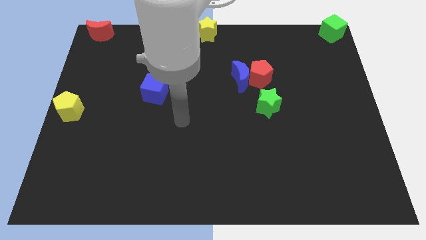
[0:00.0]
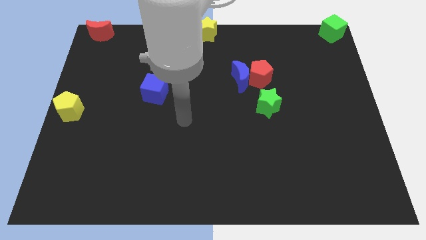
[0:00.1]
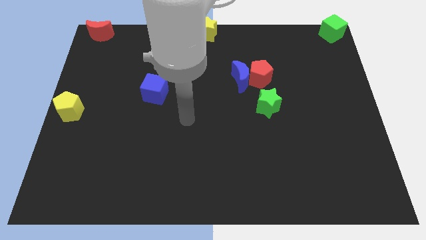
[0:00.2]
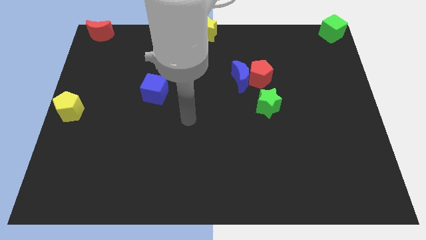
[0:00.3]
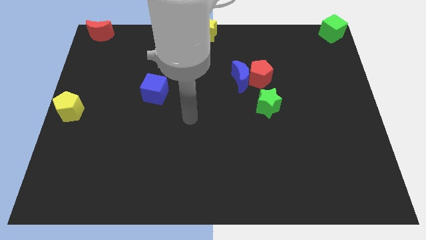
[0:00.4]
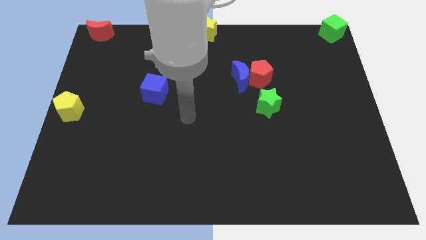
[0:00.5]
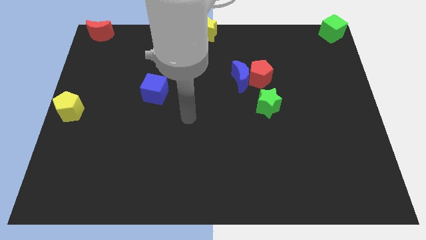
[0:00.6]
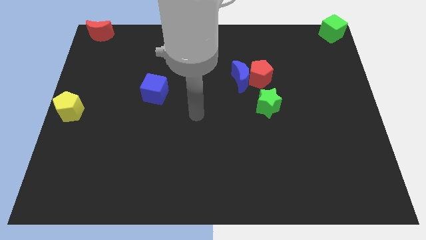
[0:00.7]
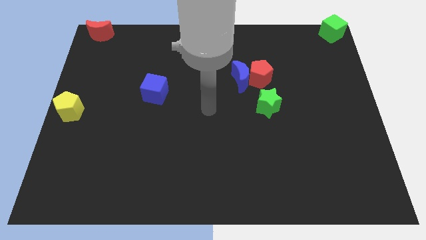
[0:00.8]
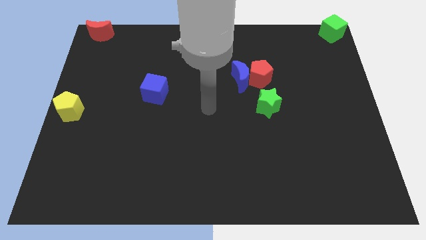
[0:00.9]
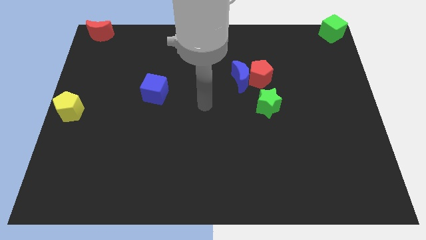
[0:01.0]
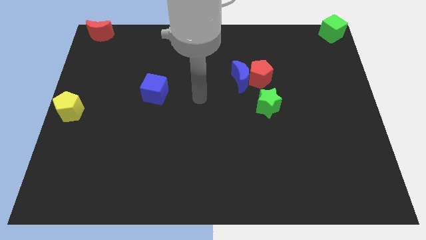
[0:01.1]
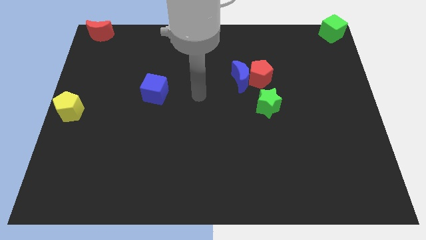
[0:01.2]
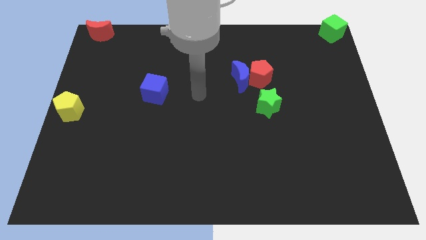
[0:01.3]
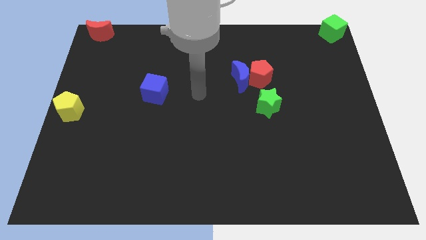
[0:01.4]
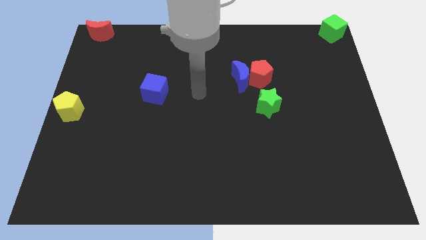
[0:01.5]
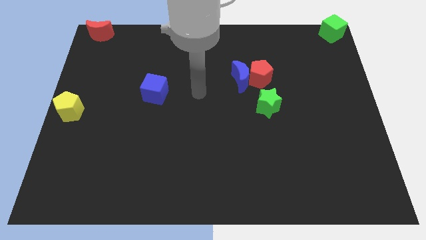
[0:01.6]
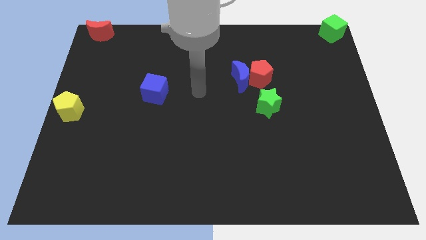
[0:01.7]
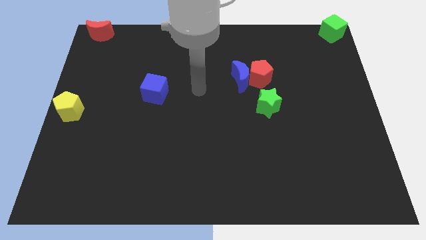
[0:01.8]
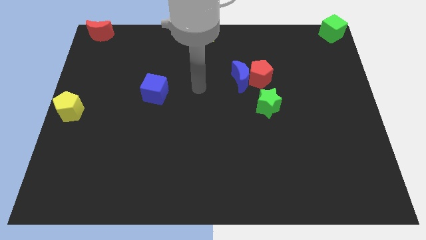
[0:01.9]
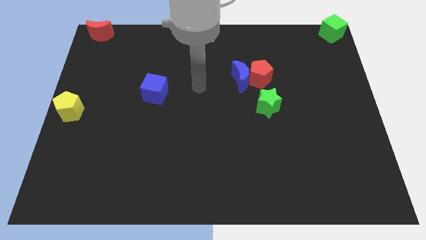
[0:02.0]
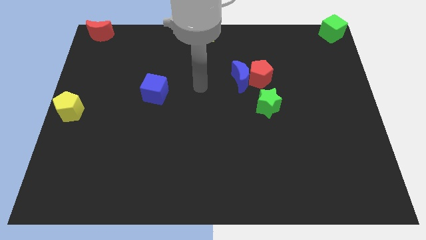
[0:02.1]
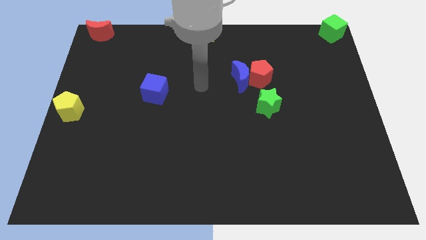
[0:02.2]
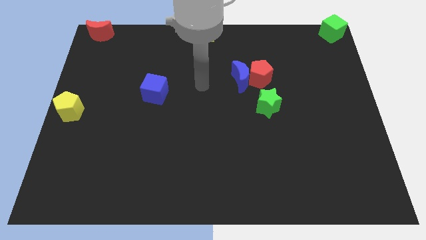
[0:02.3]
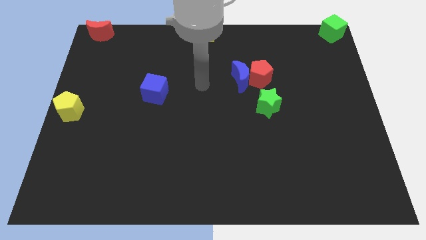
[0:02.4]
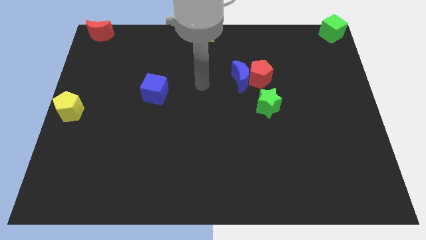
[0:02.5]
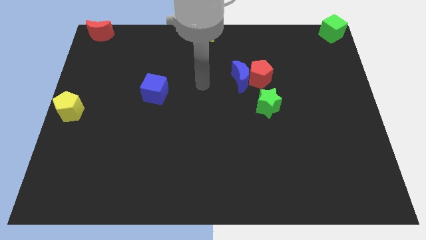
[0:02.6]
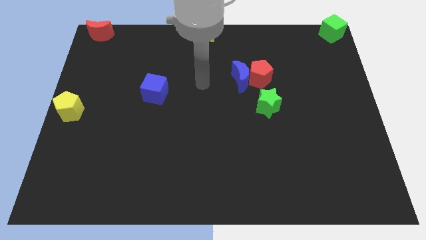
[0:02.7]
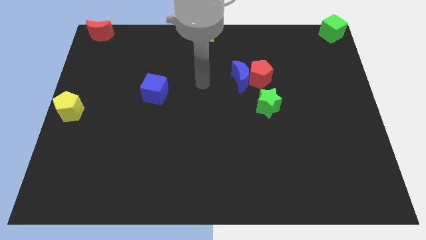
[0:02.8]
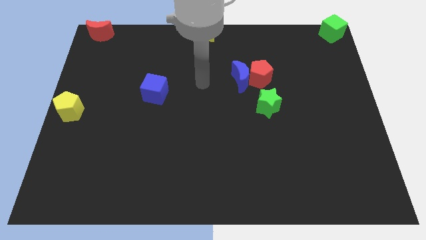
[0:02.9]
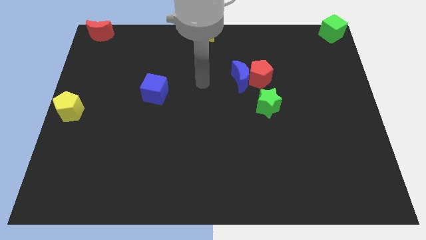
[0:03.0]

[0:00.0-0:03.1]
move arm between blue cube and blue moon

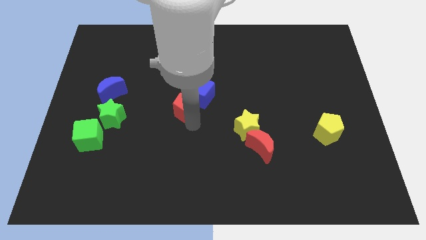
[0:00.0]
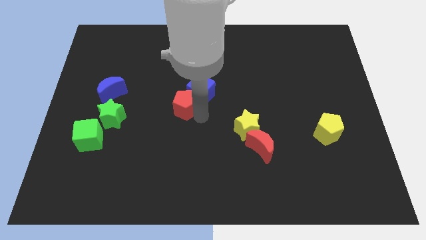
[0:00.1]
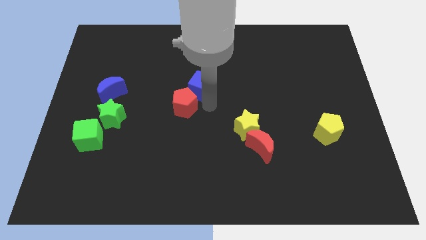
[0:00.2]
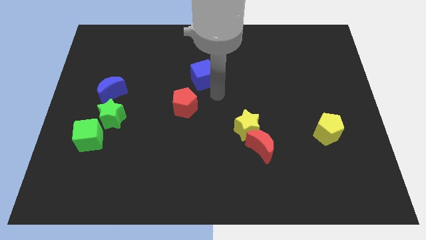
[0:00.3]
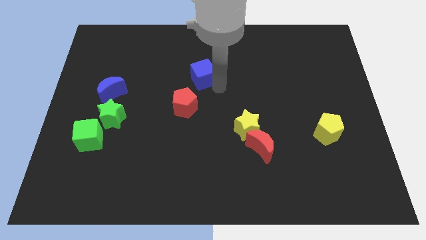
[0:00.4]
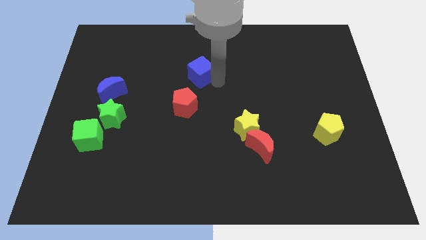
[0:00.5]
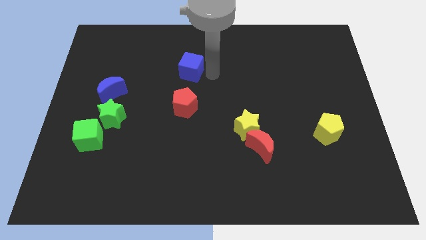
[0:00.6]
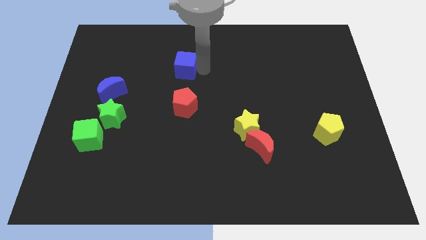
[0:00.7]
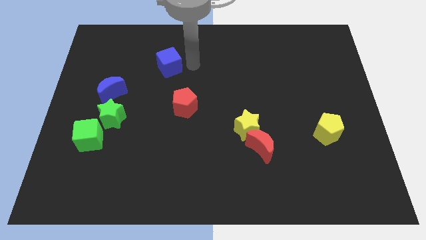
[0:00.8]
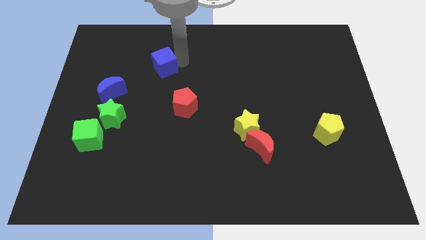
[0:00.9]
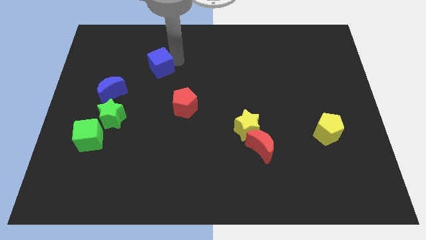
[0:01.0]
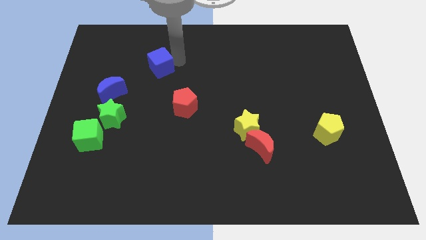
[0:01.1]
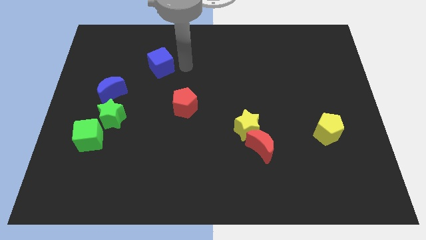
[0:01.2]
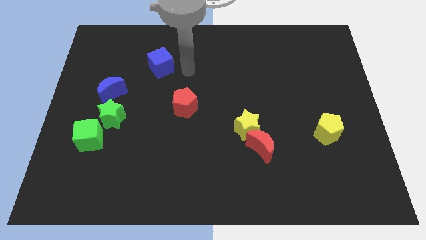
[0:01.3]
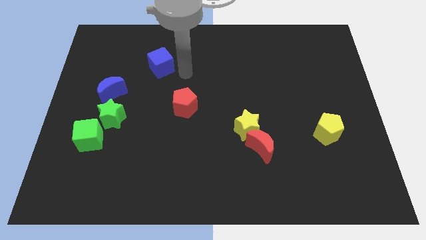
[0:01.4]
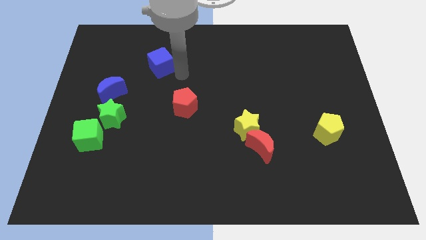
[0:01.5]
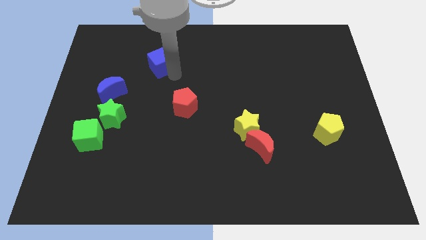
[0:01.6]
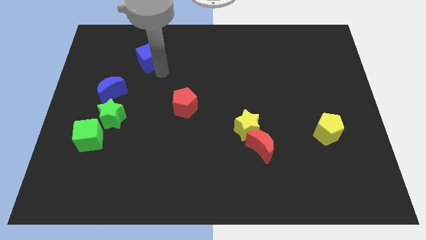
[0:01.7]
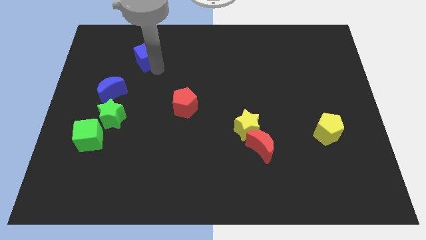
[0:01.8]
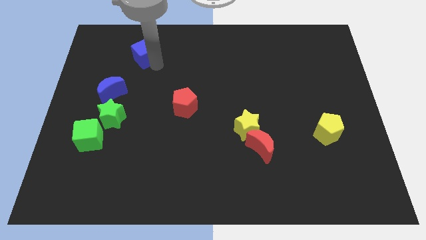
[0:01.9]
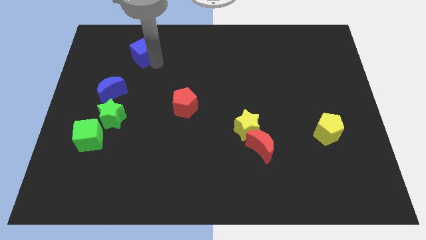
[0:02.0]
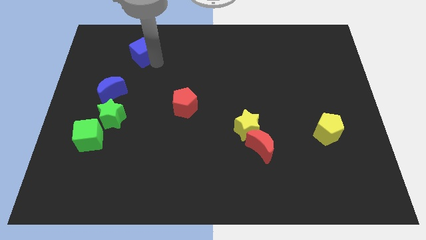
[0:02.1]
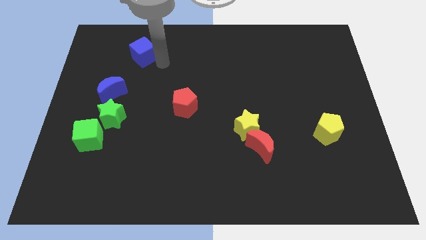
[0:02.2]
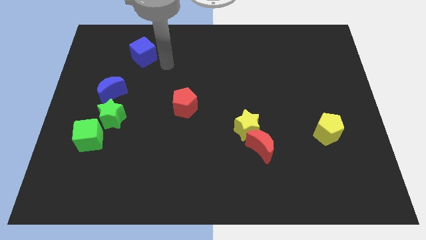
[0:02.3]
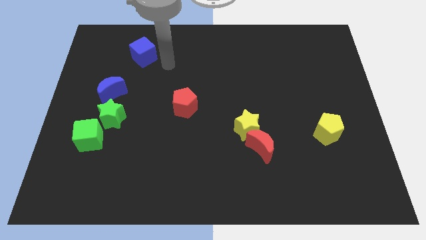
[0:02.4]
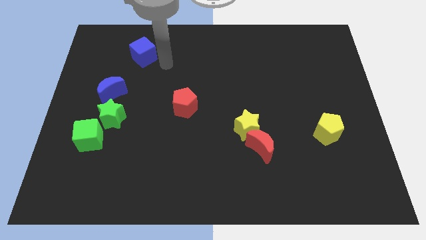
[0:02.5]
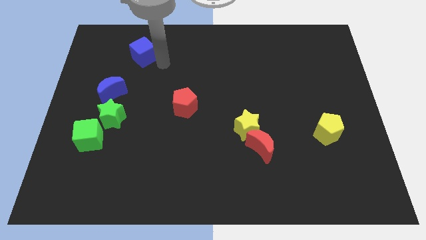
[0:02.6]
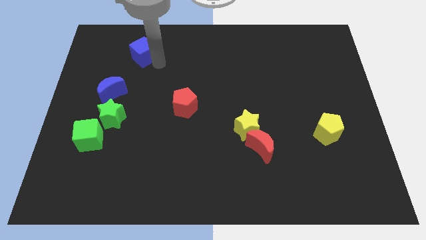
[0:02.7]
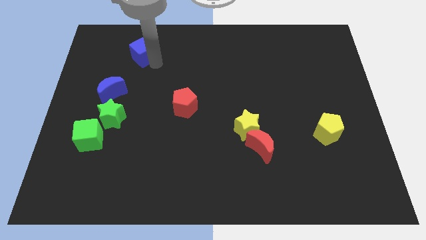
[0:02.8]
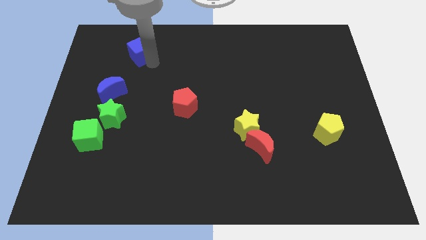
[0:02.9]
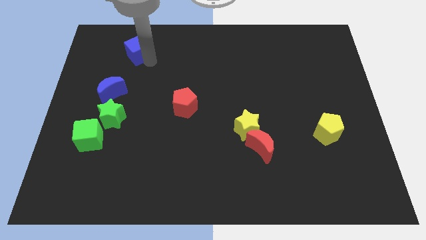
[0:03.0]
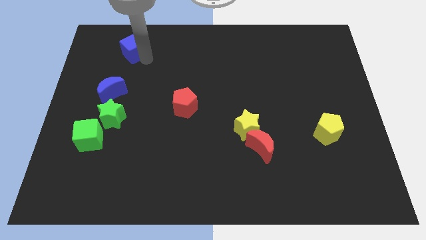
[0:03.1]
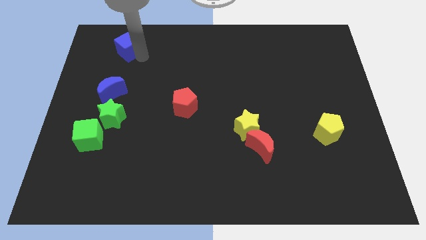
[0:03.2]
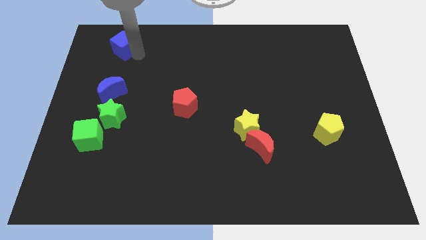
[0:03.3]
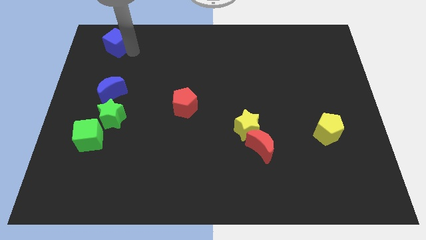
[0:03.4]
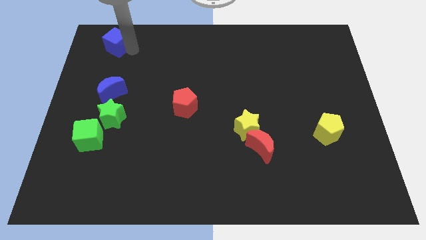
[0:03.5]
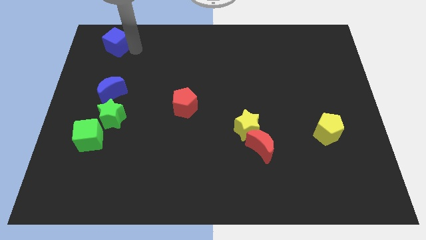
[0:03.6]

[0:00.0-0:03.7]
separate the blue cube and red pentagon

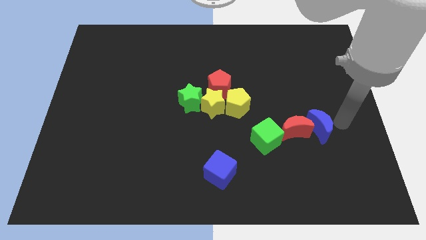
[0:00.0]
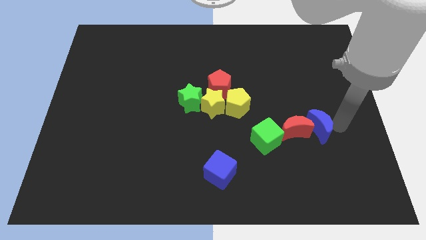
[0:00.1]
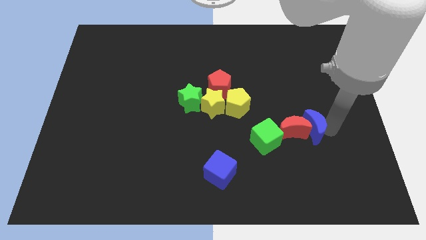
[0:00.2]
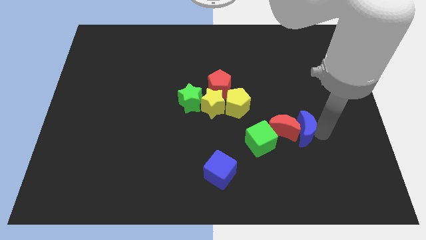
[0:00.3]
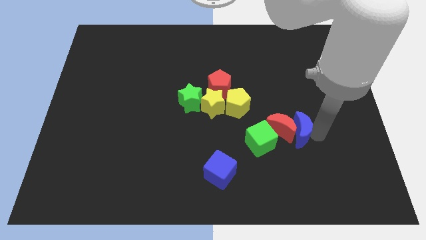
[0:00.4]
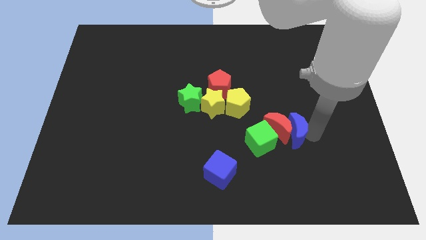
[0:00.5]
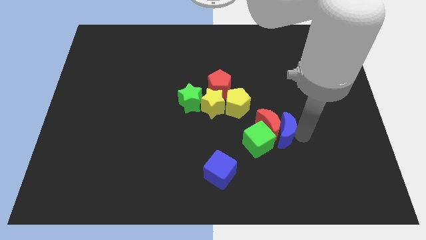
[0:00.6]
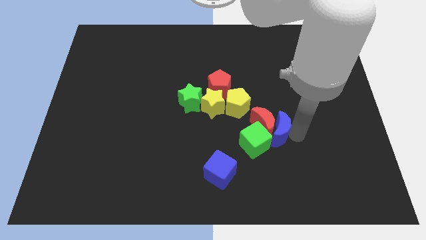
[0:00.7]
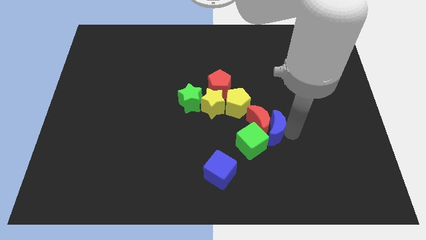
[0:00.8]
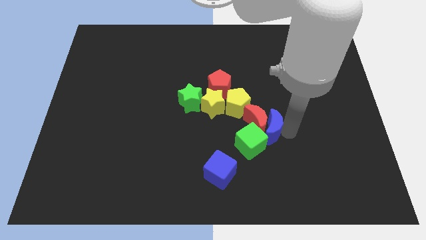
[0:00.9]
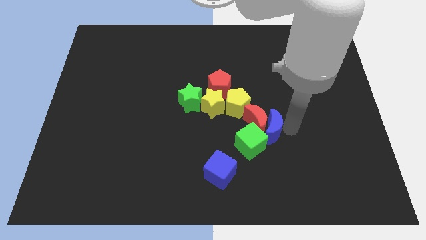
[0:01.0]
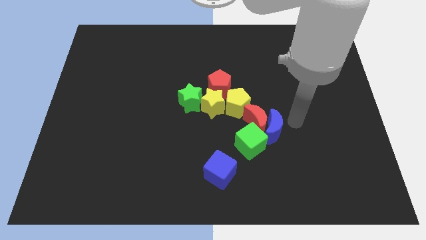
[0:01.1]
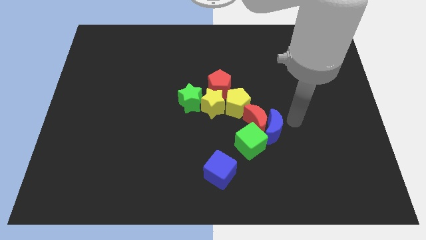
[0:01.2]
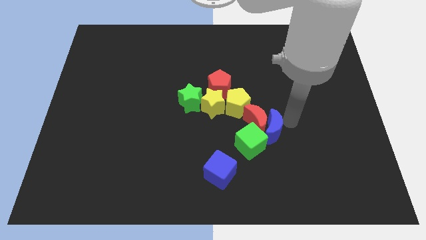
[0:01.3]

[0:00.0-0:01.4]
move the blue crescent to the right of the red crescent

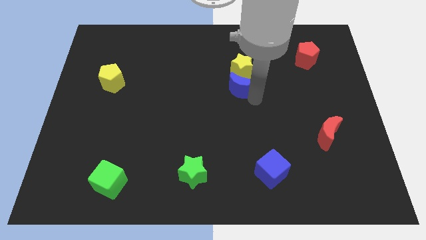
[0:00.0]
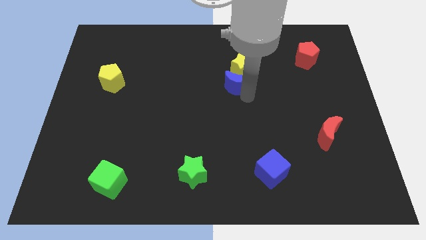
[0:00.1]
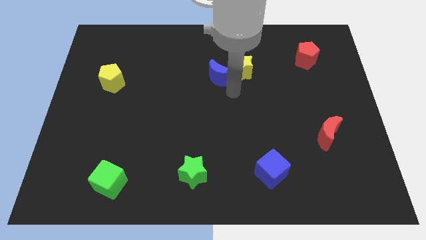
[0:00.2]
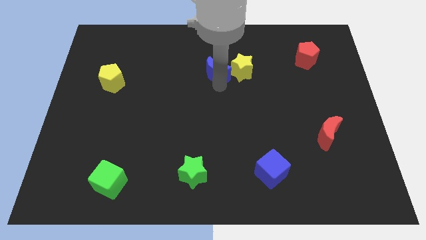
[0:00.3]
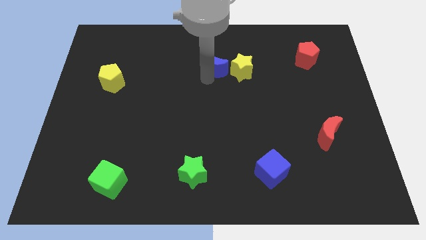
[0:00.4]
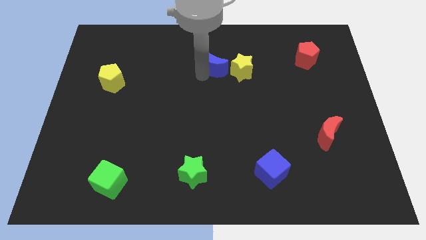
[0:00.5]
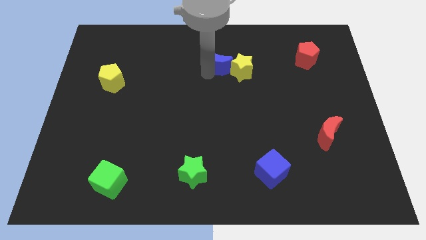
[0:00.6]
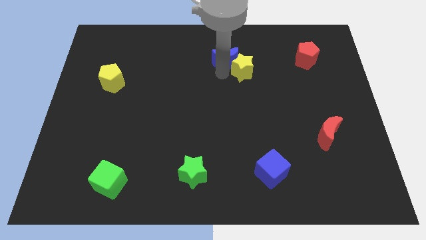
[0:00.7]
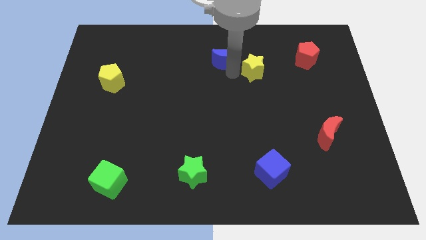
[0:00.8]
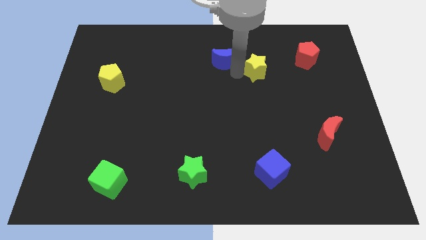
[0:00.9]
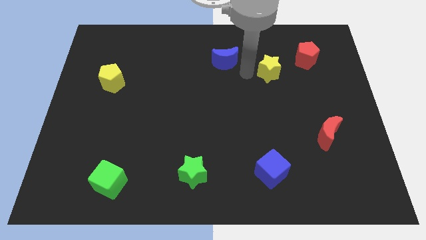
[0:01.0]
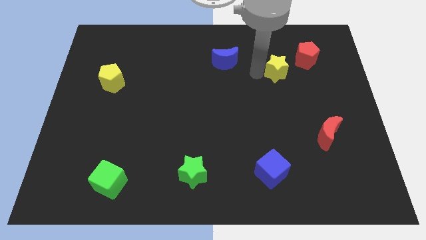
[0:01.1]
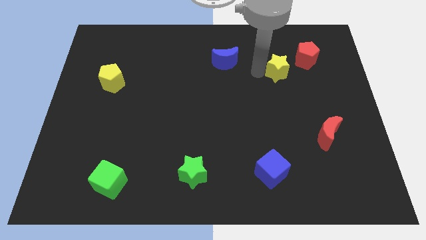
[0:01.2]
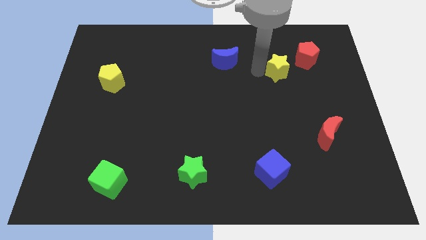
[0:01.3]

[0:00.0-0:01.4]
separate the blue moon and yellow star
